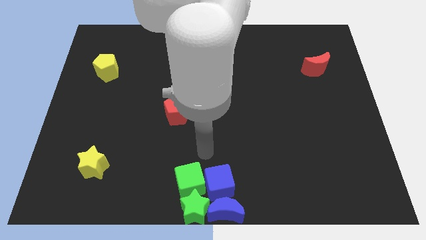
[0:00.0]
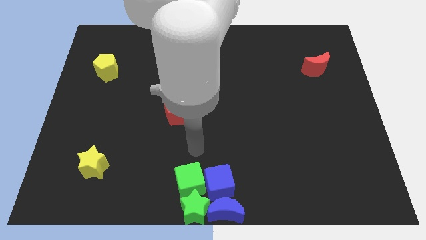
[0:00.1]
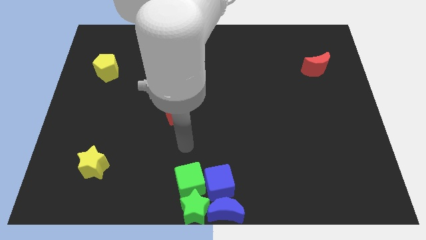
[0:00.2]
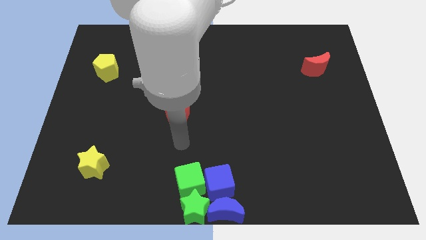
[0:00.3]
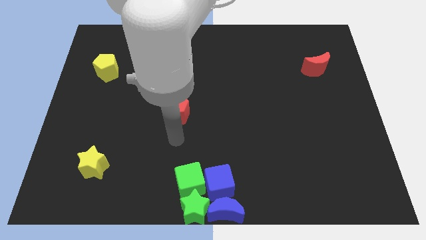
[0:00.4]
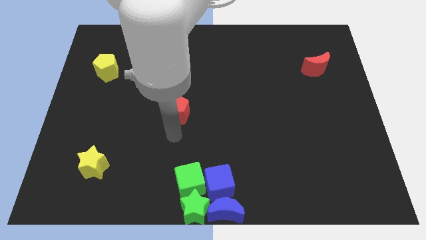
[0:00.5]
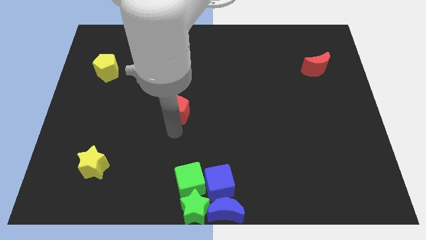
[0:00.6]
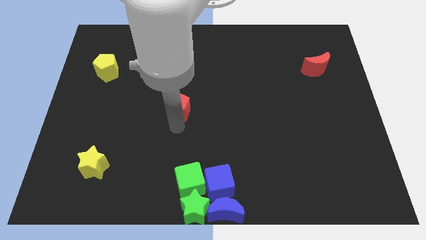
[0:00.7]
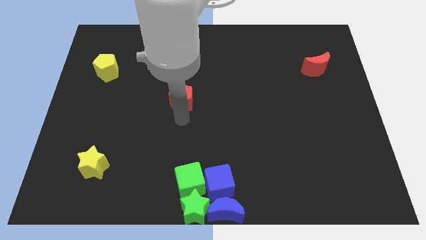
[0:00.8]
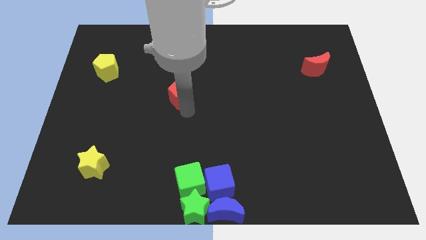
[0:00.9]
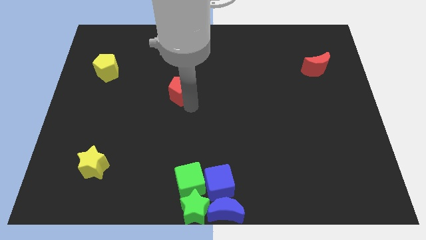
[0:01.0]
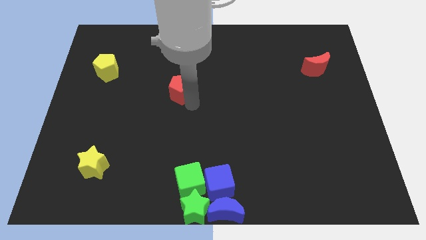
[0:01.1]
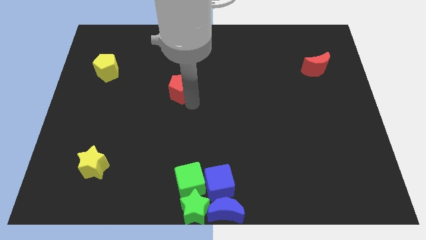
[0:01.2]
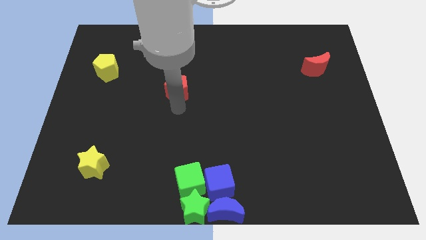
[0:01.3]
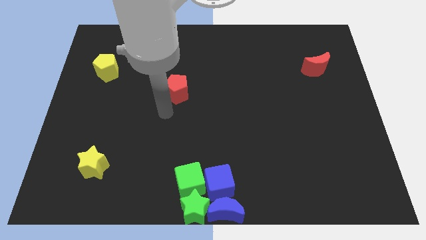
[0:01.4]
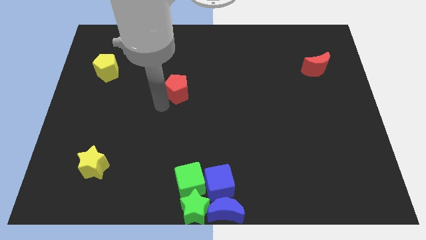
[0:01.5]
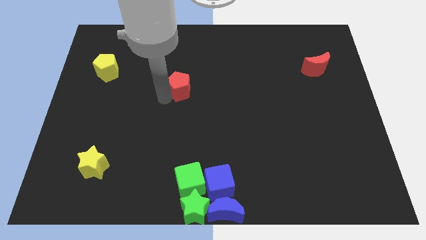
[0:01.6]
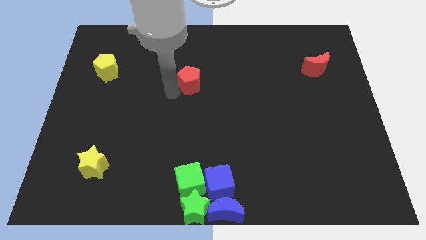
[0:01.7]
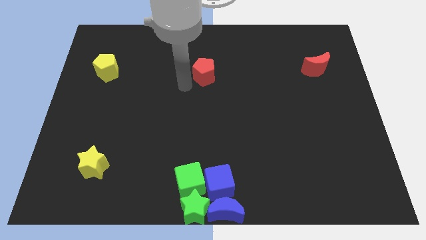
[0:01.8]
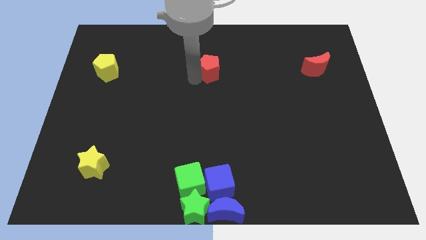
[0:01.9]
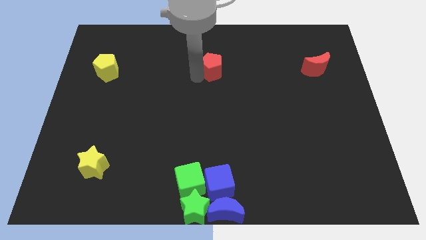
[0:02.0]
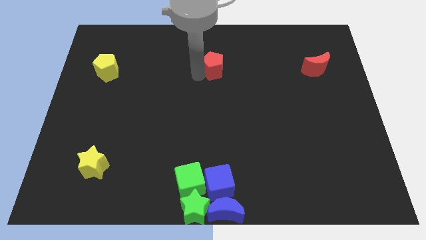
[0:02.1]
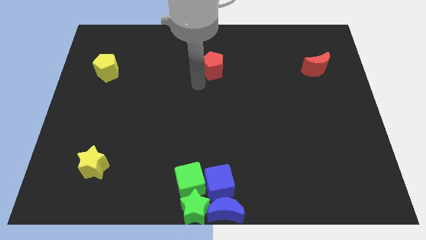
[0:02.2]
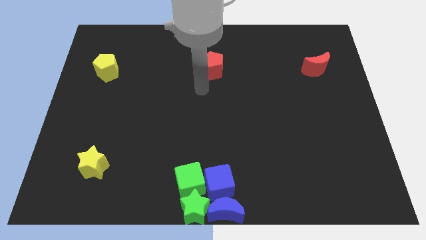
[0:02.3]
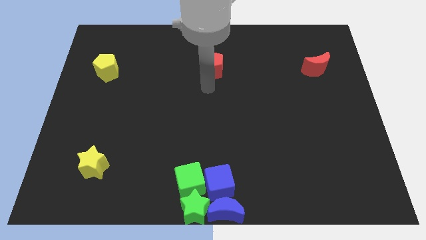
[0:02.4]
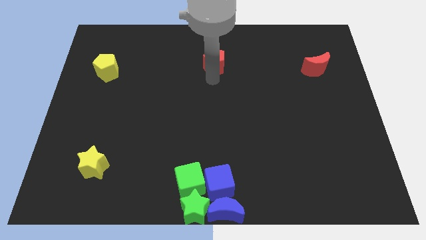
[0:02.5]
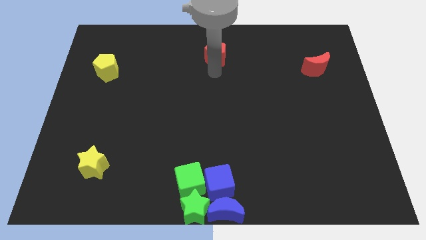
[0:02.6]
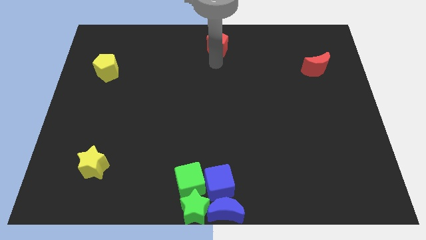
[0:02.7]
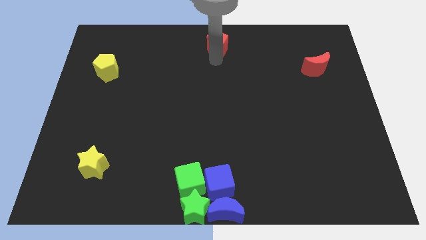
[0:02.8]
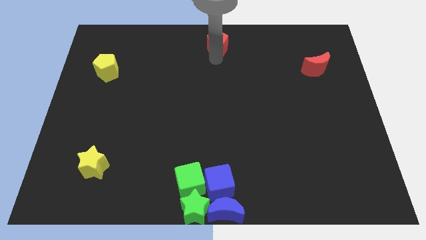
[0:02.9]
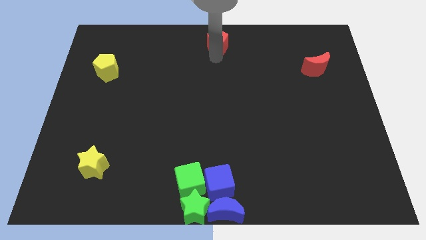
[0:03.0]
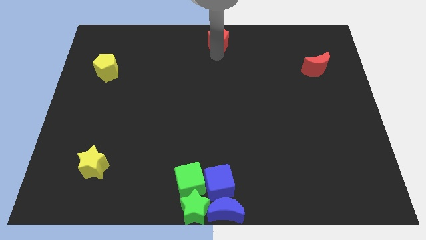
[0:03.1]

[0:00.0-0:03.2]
slide the red pentagon slightly towards the top center of the board

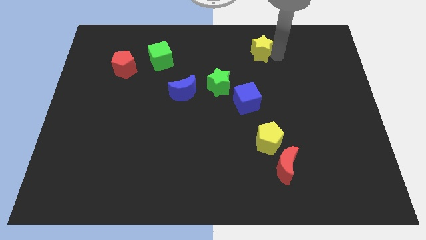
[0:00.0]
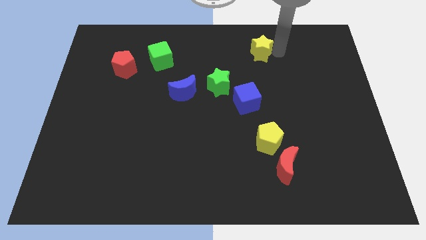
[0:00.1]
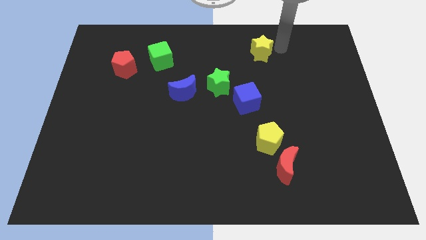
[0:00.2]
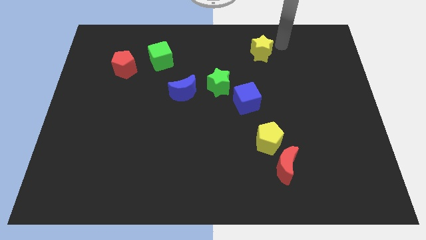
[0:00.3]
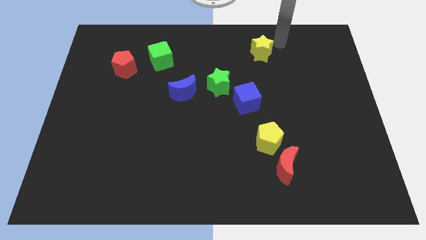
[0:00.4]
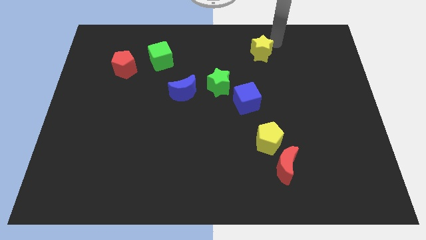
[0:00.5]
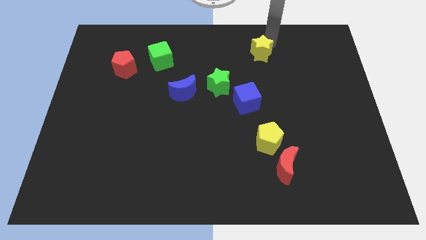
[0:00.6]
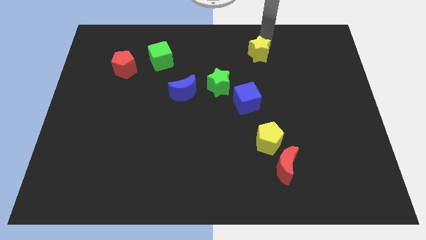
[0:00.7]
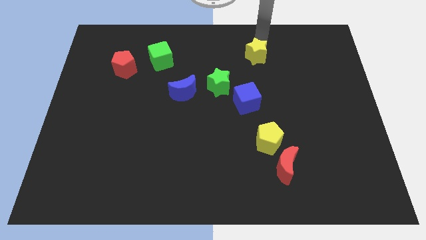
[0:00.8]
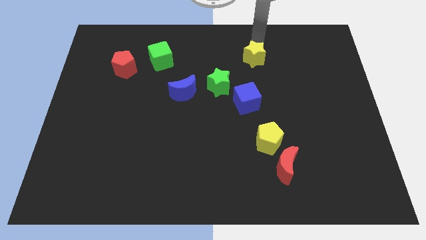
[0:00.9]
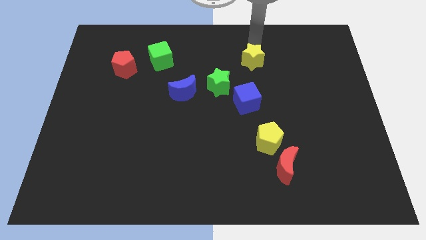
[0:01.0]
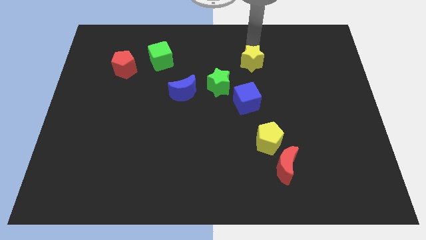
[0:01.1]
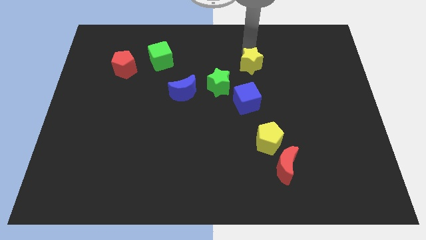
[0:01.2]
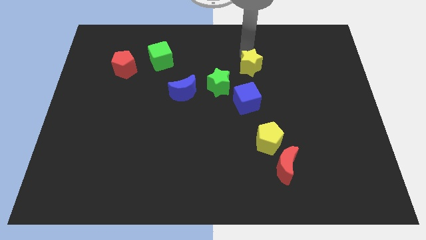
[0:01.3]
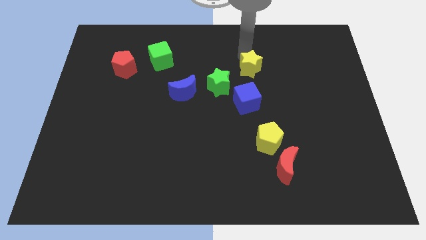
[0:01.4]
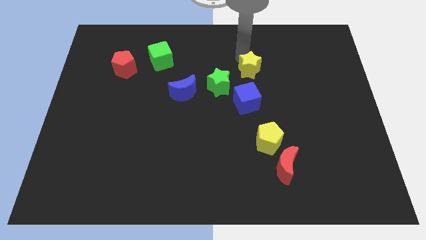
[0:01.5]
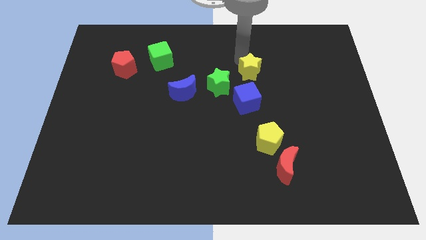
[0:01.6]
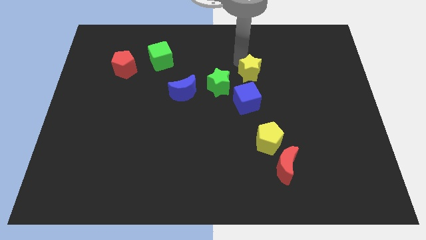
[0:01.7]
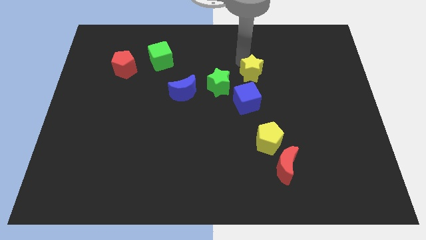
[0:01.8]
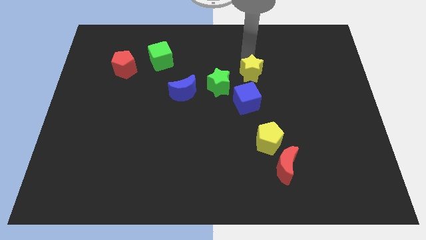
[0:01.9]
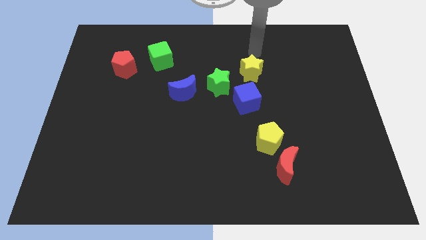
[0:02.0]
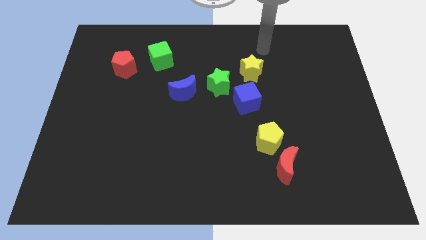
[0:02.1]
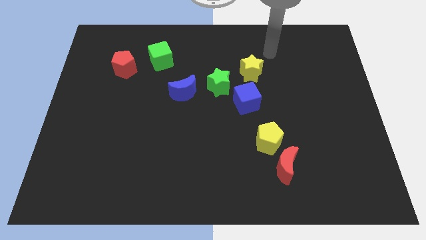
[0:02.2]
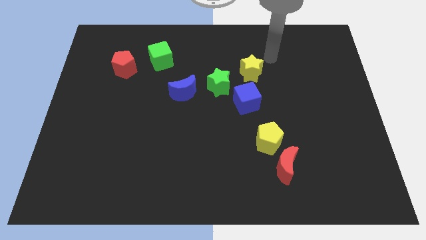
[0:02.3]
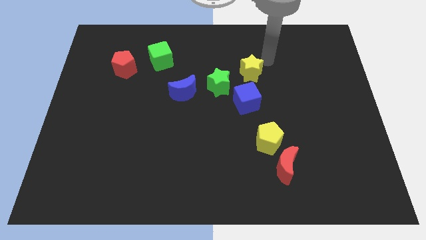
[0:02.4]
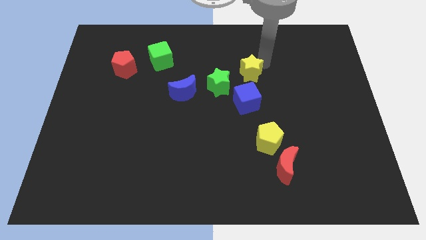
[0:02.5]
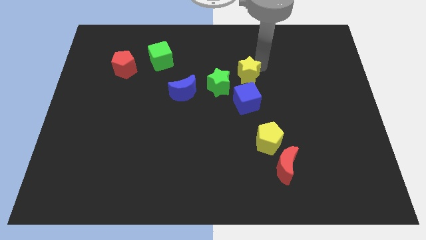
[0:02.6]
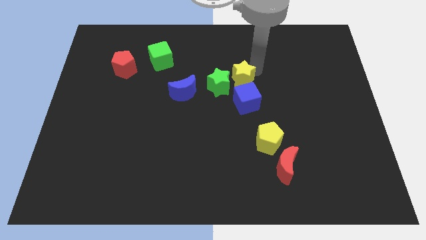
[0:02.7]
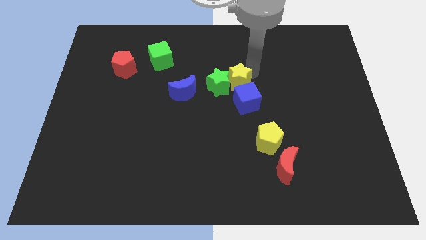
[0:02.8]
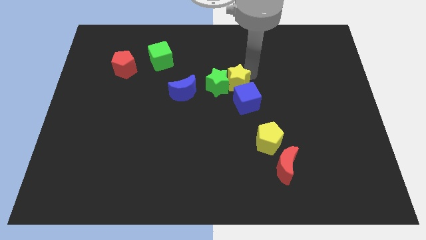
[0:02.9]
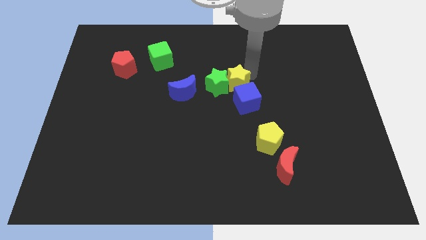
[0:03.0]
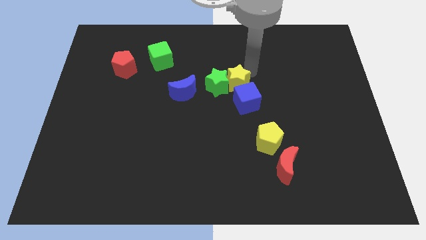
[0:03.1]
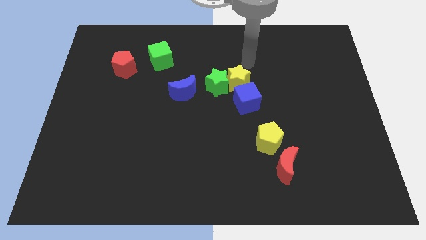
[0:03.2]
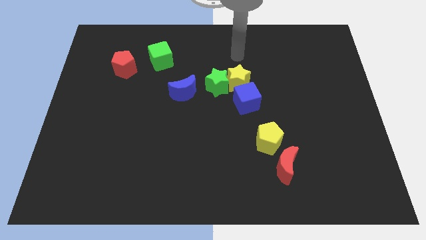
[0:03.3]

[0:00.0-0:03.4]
put the yellow and green star together

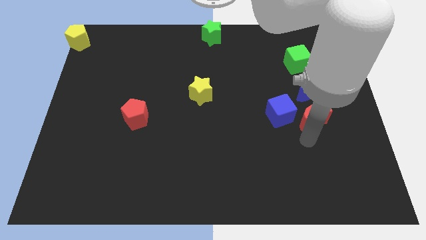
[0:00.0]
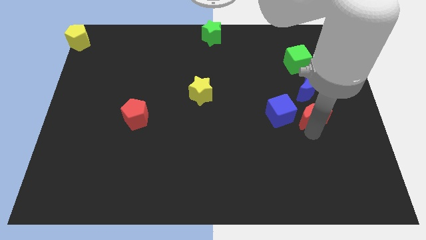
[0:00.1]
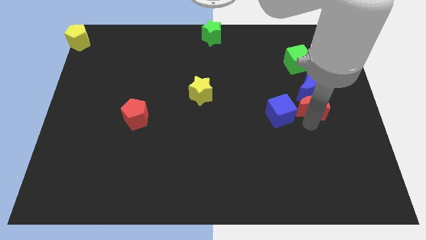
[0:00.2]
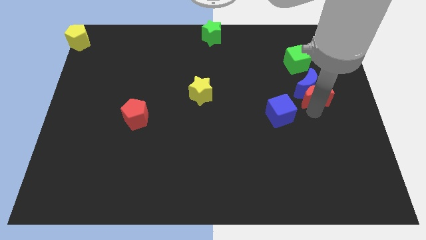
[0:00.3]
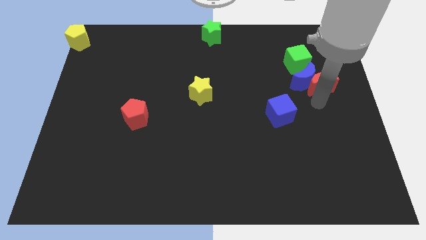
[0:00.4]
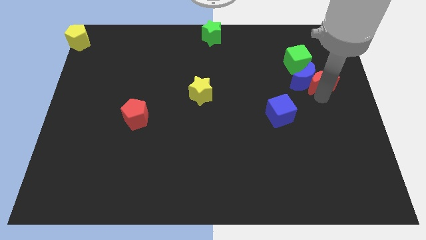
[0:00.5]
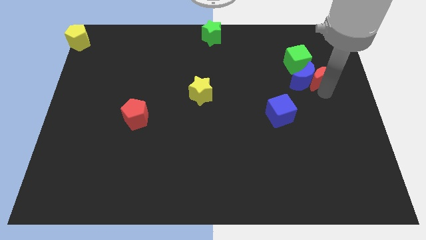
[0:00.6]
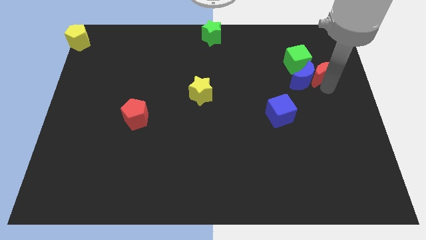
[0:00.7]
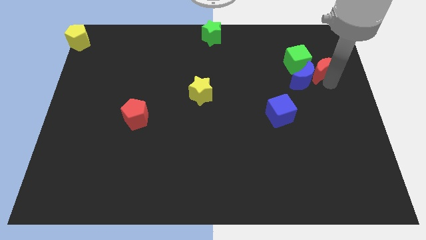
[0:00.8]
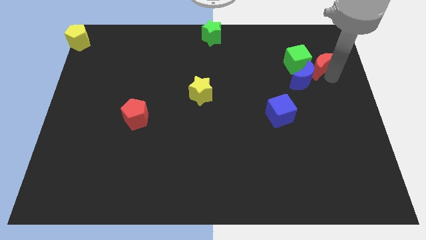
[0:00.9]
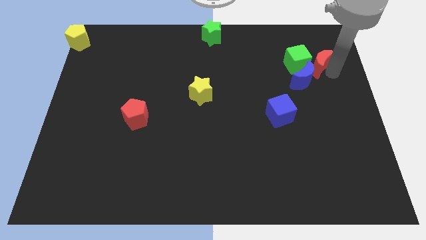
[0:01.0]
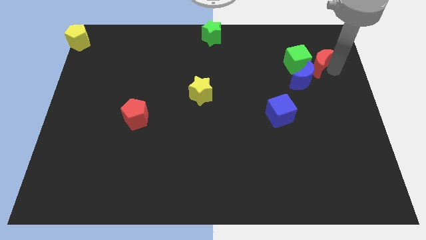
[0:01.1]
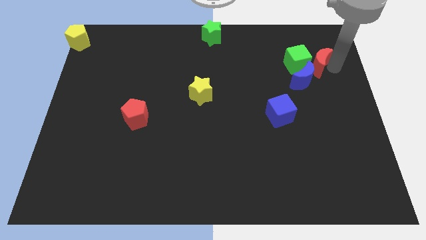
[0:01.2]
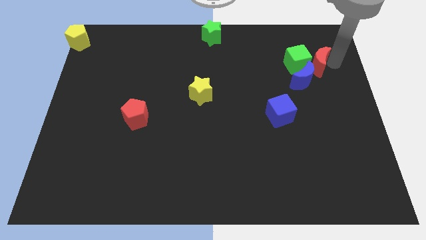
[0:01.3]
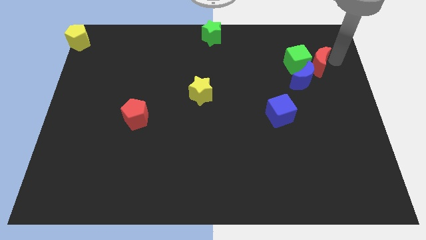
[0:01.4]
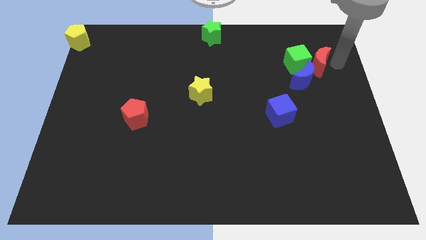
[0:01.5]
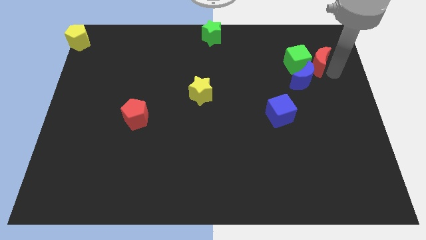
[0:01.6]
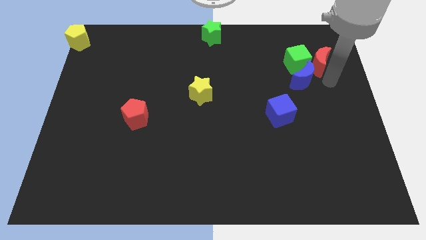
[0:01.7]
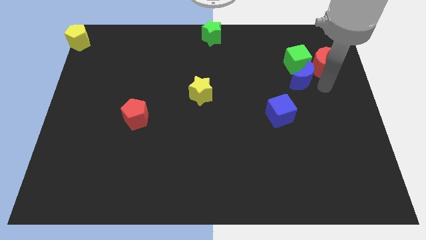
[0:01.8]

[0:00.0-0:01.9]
place red crescent to the right of blue crescent

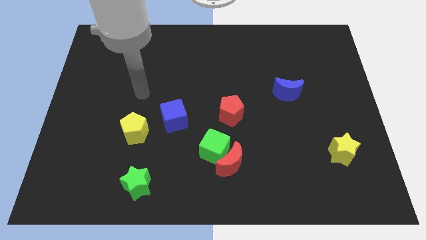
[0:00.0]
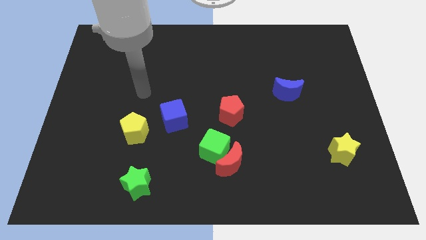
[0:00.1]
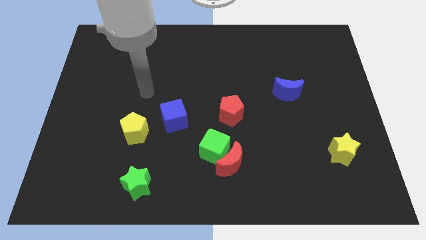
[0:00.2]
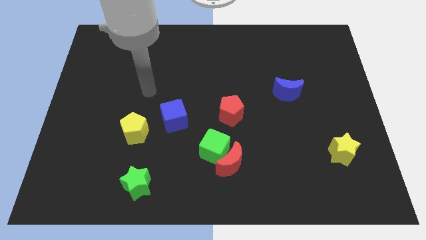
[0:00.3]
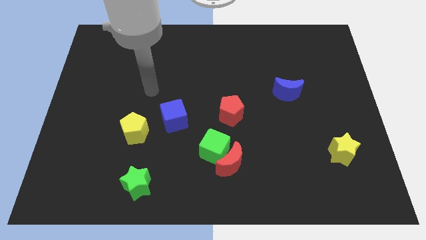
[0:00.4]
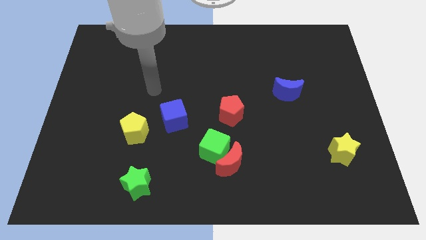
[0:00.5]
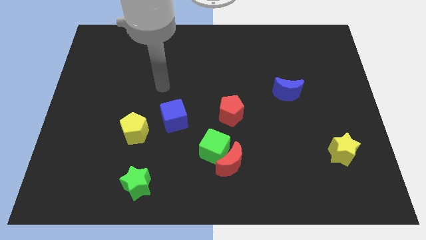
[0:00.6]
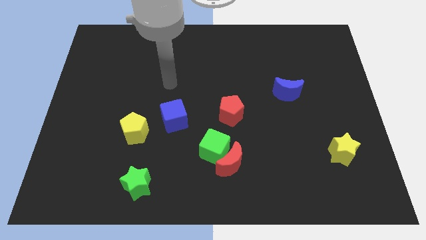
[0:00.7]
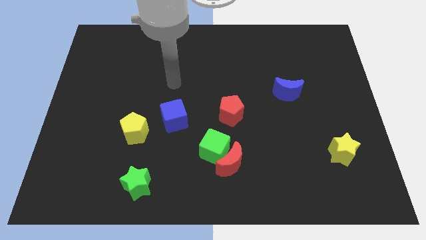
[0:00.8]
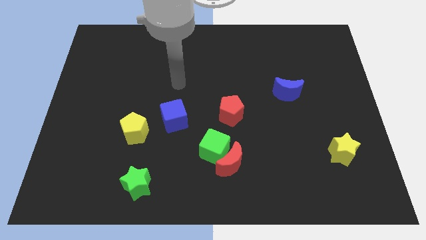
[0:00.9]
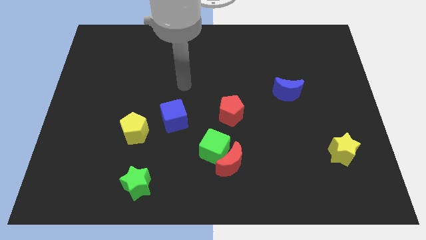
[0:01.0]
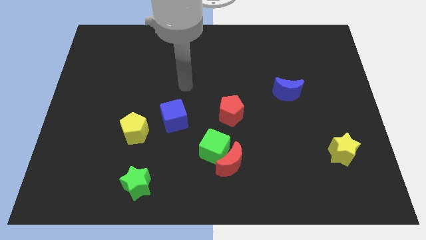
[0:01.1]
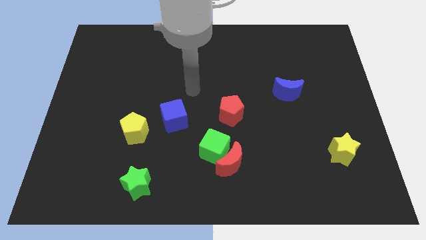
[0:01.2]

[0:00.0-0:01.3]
point your arm at the top of the blue cube
